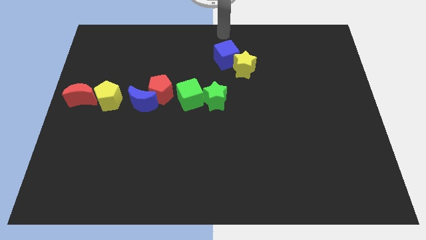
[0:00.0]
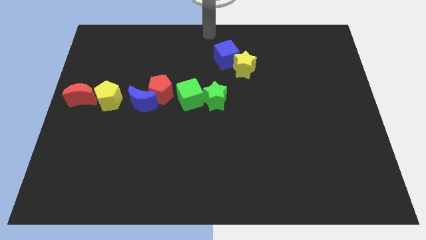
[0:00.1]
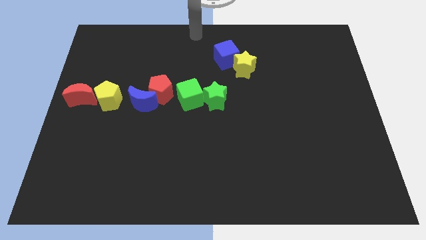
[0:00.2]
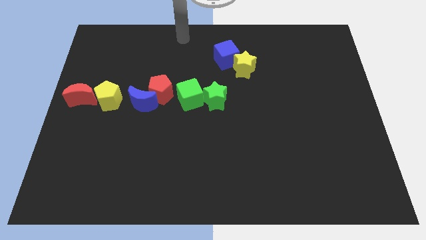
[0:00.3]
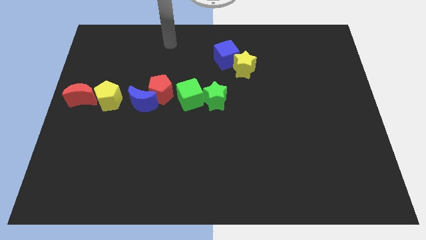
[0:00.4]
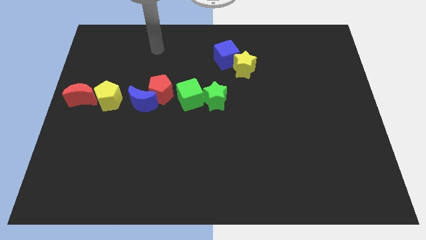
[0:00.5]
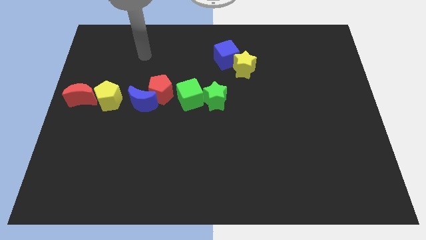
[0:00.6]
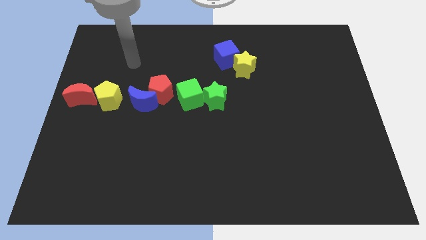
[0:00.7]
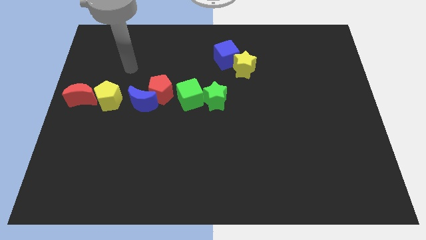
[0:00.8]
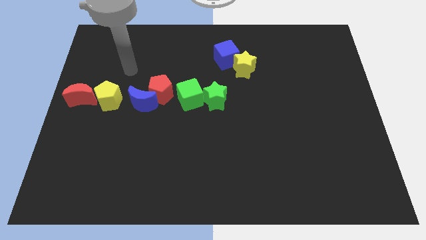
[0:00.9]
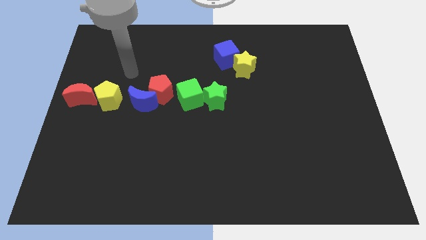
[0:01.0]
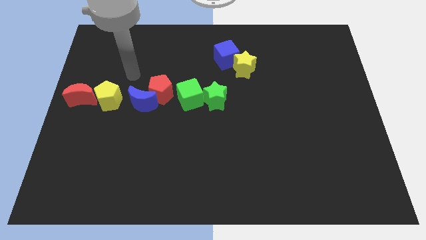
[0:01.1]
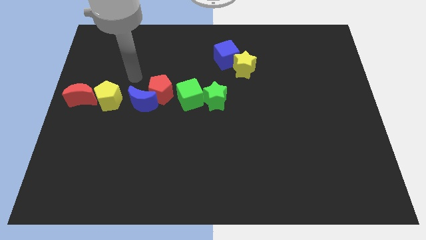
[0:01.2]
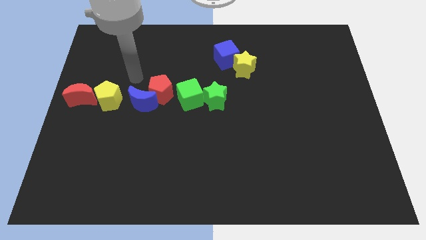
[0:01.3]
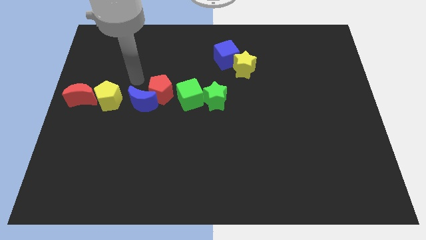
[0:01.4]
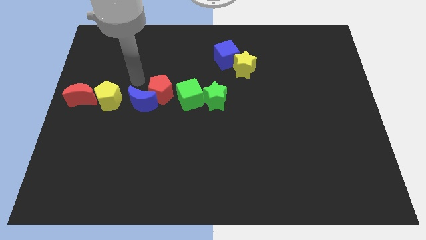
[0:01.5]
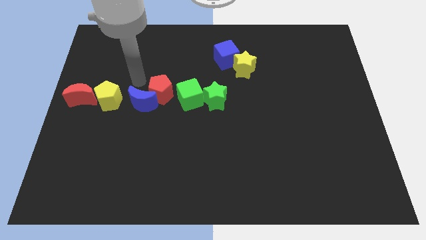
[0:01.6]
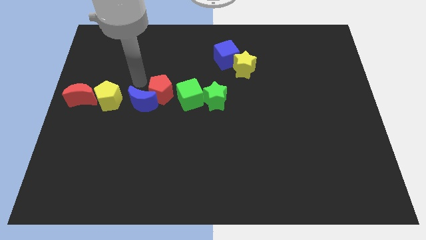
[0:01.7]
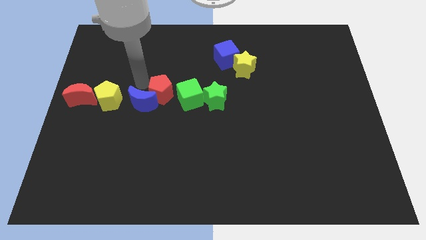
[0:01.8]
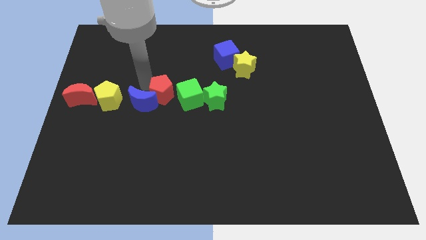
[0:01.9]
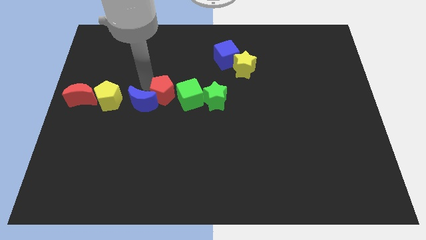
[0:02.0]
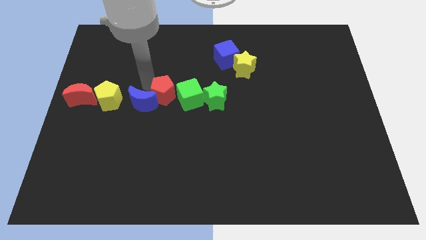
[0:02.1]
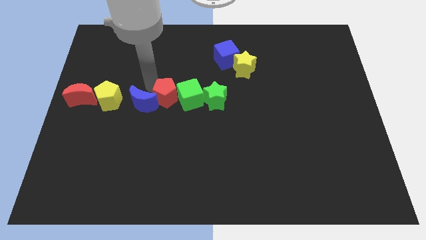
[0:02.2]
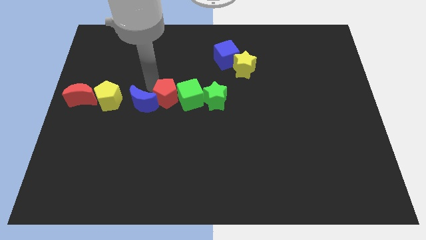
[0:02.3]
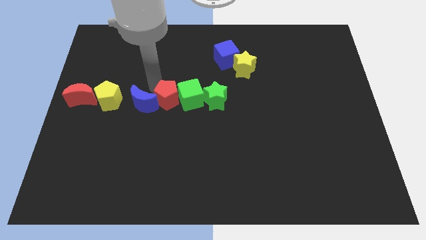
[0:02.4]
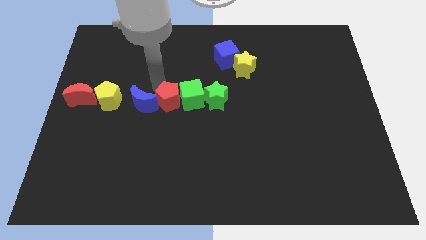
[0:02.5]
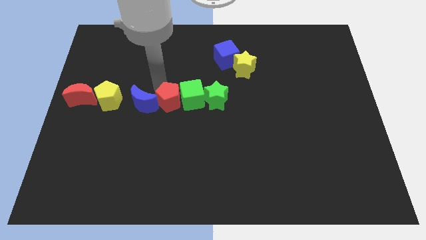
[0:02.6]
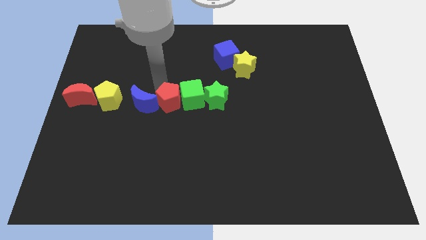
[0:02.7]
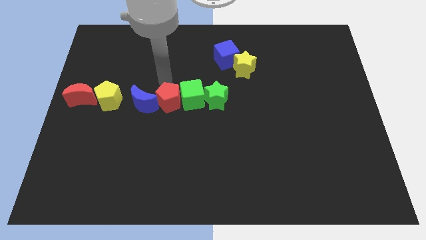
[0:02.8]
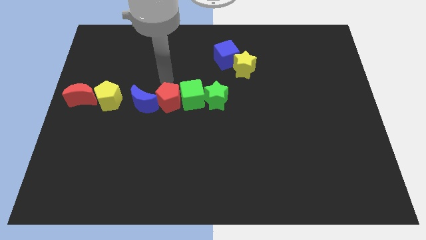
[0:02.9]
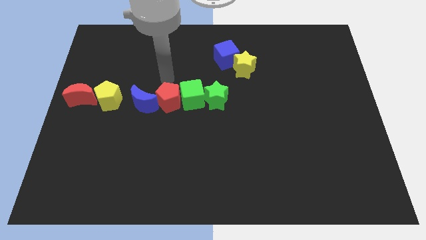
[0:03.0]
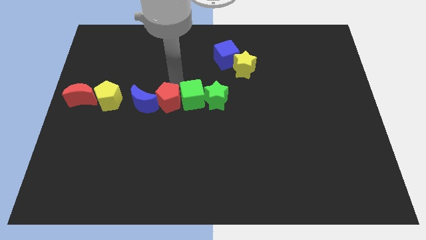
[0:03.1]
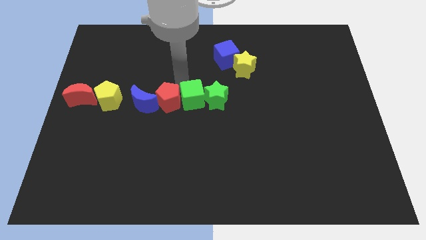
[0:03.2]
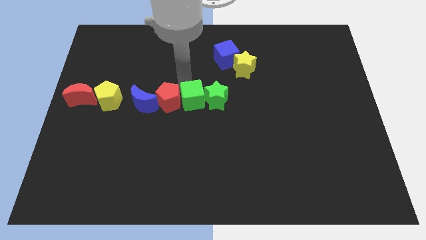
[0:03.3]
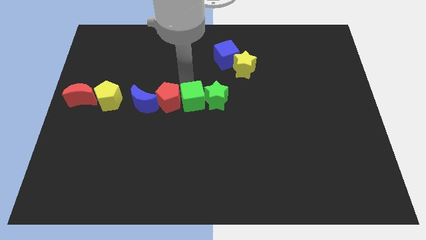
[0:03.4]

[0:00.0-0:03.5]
adjust the red pentagon and green cube into the horizontal line of blocks

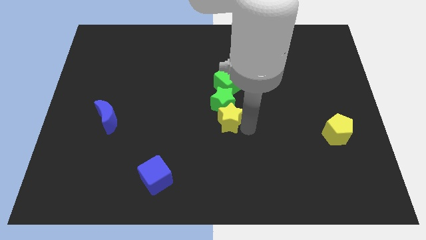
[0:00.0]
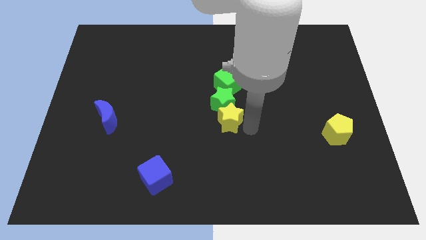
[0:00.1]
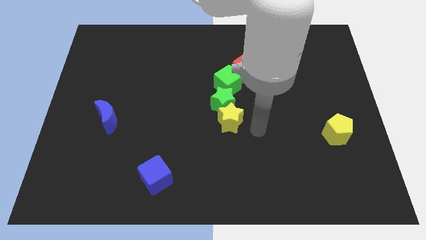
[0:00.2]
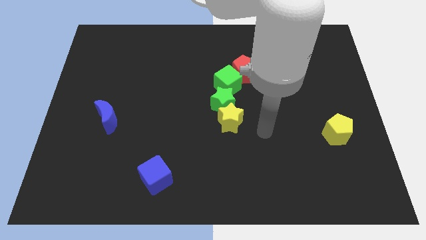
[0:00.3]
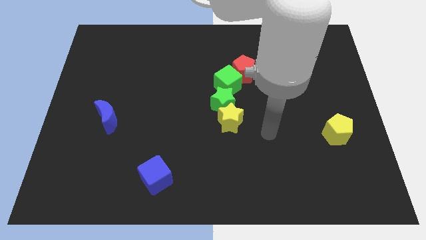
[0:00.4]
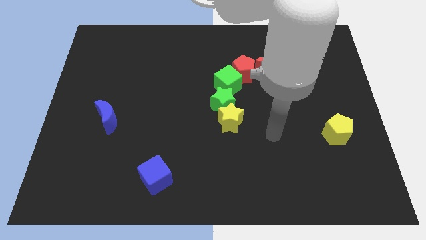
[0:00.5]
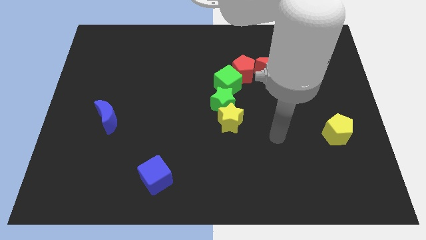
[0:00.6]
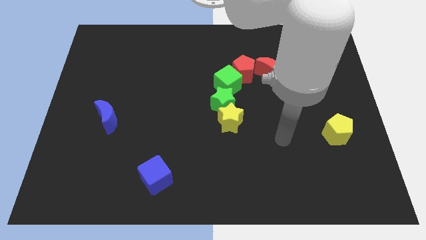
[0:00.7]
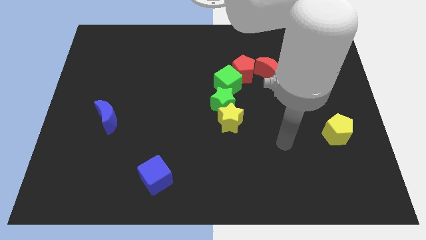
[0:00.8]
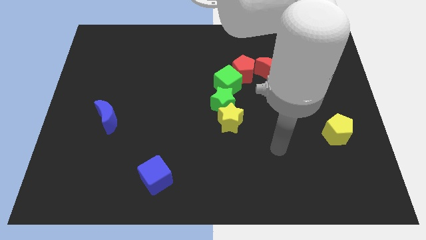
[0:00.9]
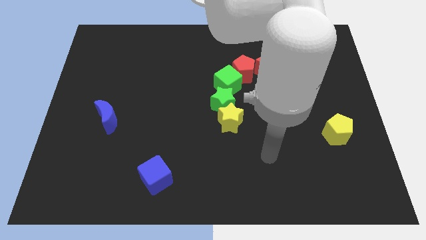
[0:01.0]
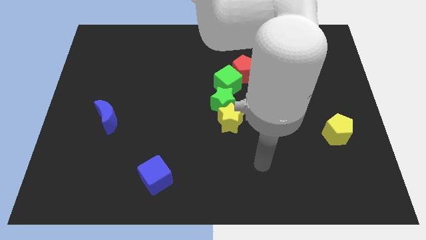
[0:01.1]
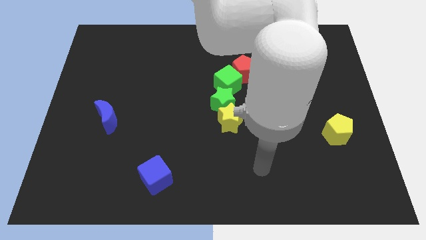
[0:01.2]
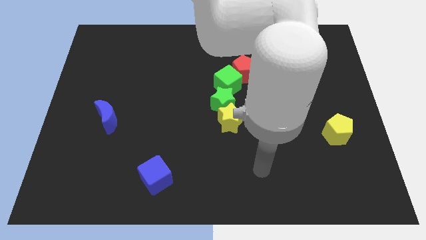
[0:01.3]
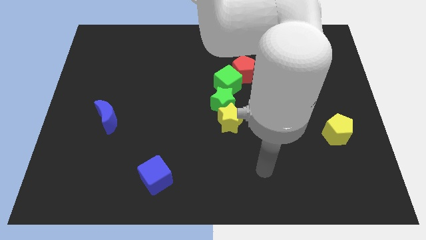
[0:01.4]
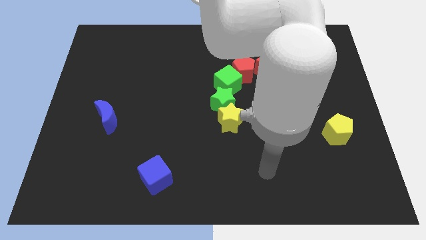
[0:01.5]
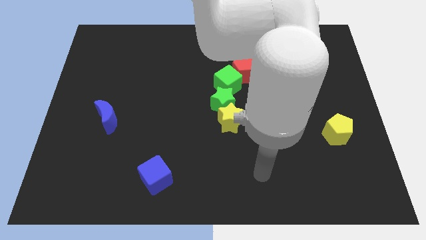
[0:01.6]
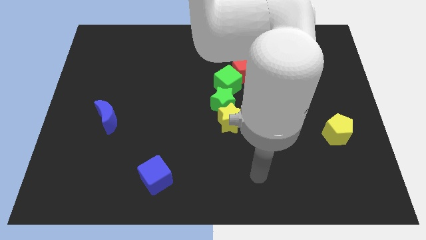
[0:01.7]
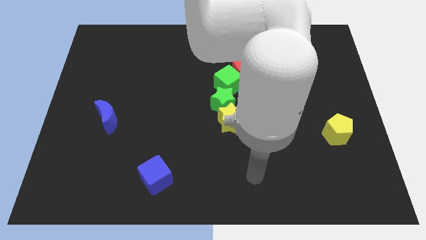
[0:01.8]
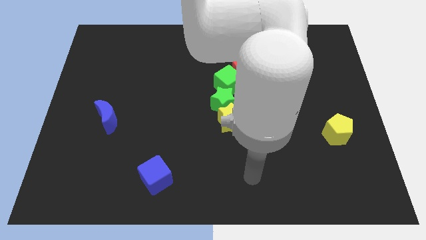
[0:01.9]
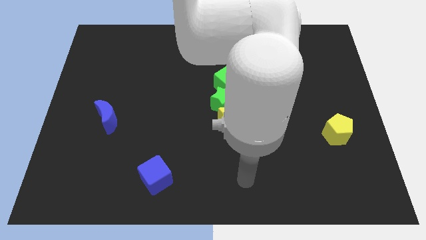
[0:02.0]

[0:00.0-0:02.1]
move away from the yellow star

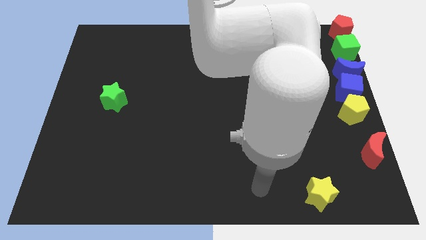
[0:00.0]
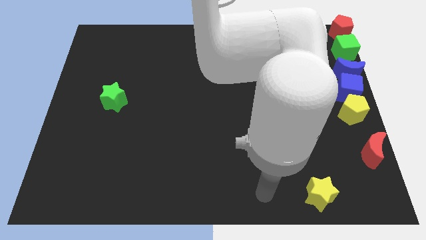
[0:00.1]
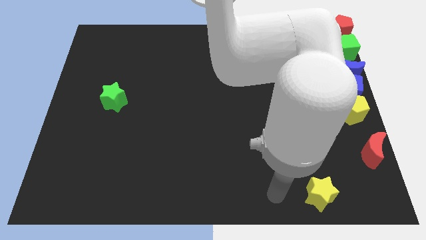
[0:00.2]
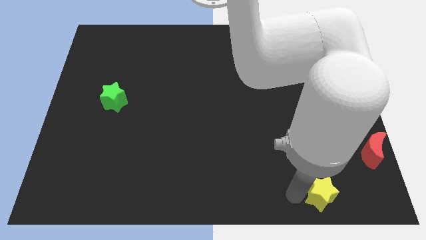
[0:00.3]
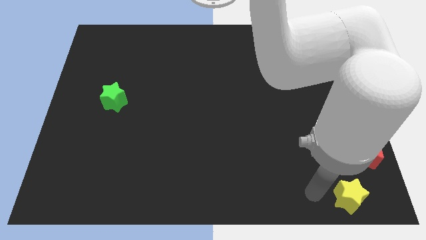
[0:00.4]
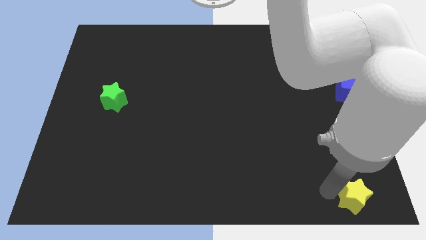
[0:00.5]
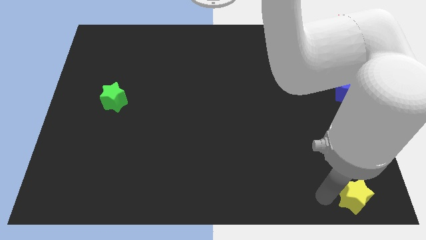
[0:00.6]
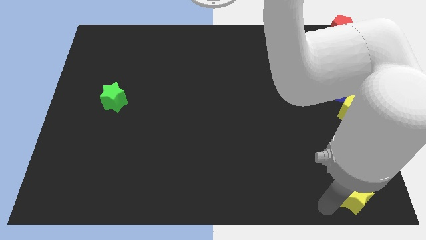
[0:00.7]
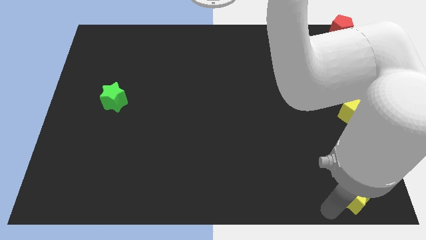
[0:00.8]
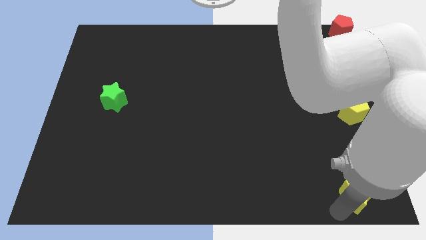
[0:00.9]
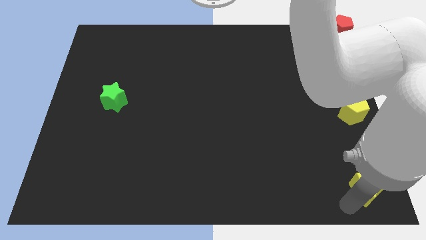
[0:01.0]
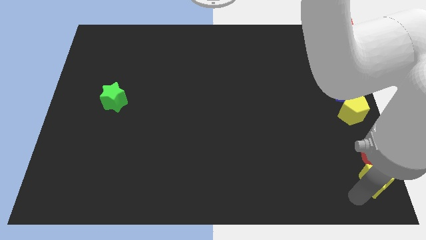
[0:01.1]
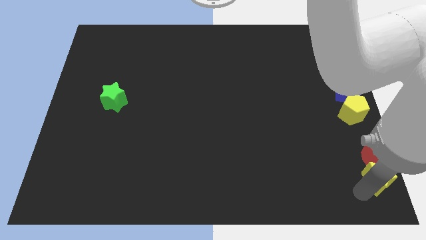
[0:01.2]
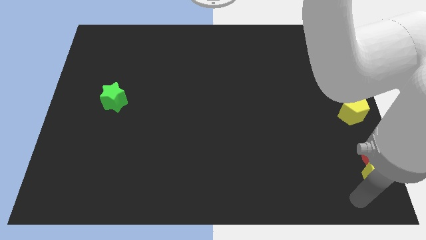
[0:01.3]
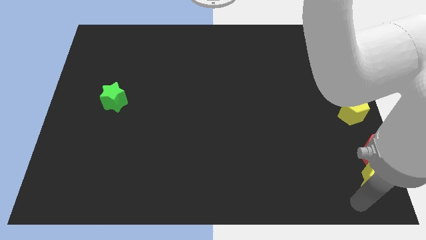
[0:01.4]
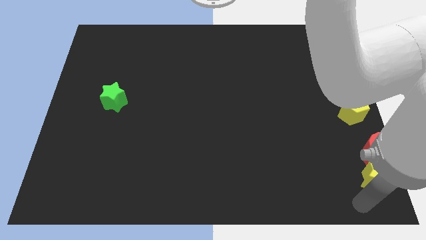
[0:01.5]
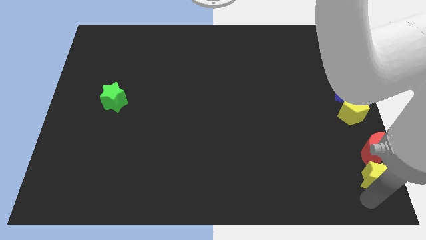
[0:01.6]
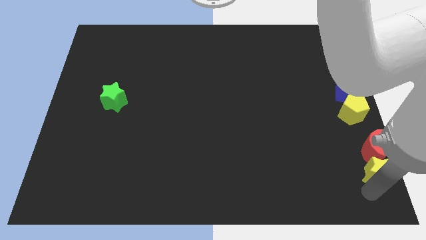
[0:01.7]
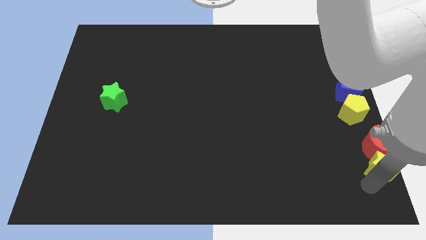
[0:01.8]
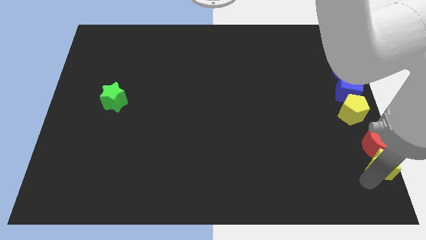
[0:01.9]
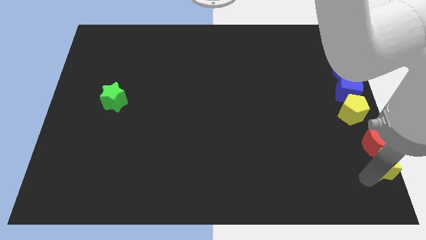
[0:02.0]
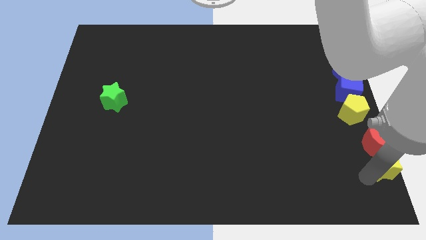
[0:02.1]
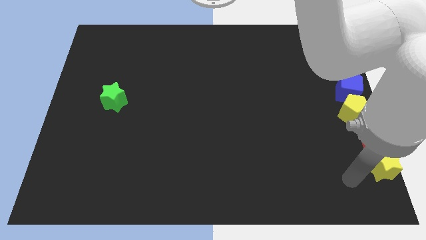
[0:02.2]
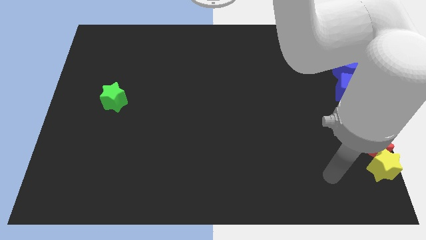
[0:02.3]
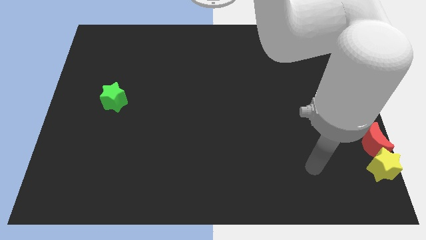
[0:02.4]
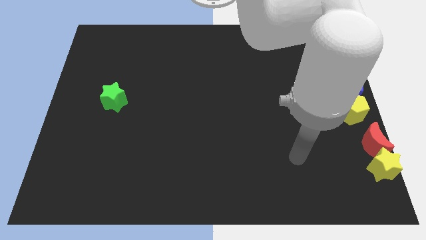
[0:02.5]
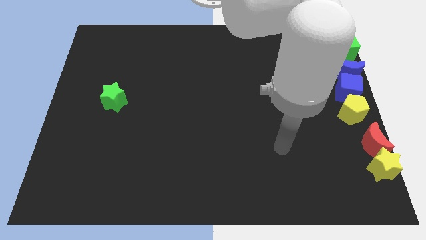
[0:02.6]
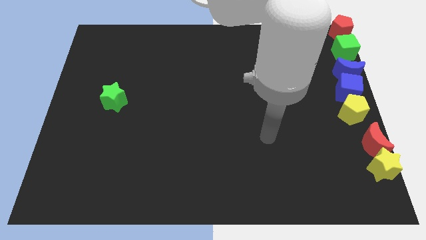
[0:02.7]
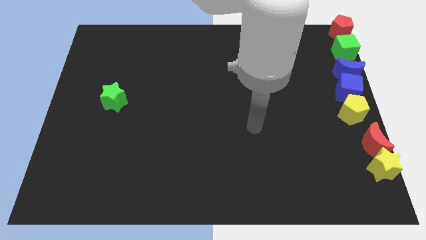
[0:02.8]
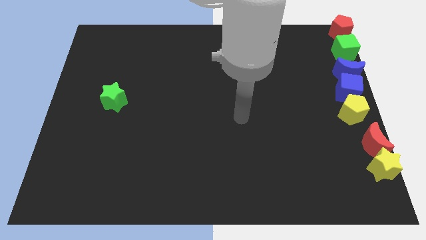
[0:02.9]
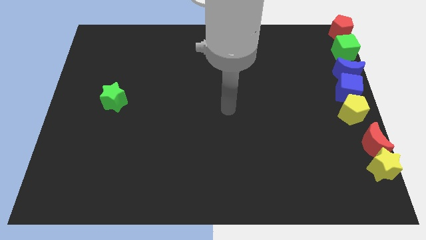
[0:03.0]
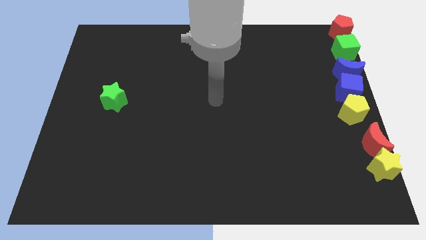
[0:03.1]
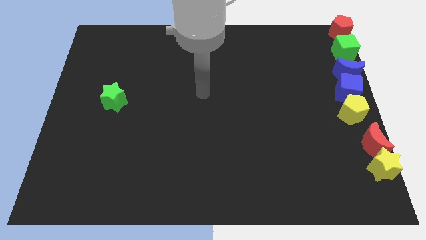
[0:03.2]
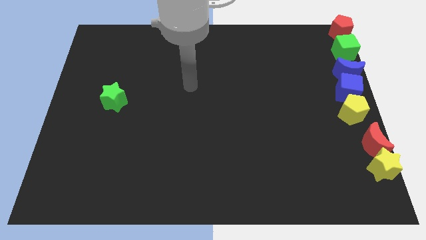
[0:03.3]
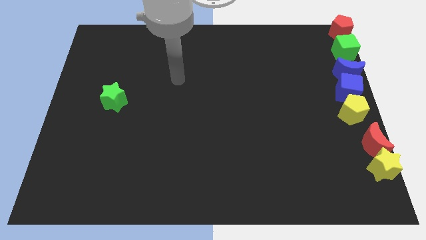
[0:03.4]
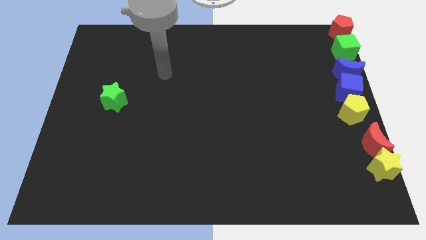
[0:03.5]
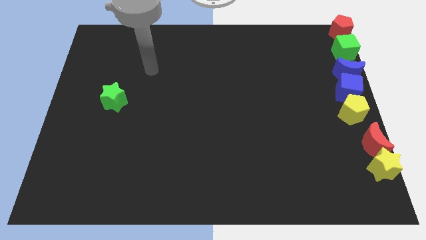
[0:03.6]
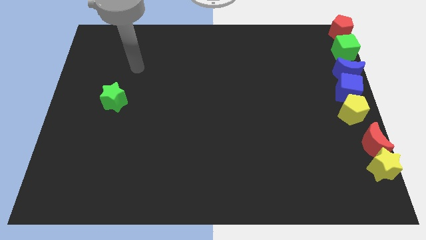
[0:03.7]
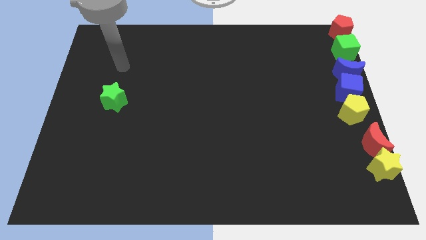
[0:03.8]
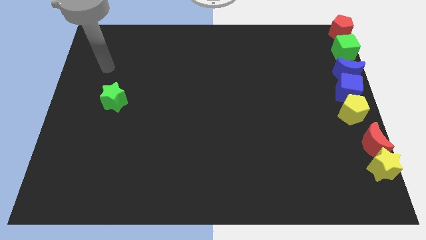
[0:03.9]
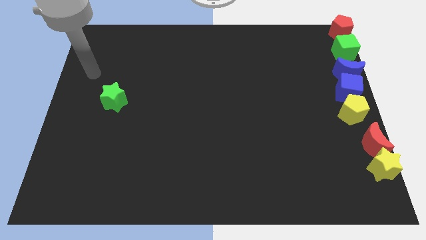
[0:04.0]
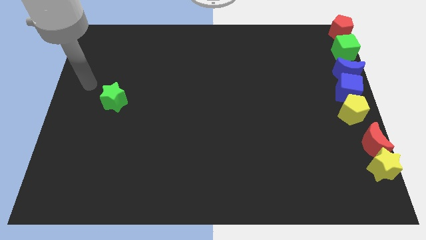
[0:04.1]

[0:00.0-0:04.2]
push the yellow star into the red moon
